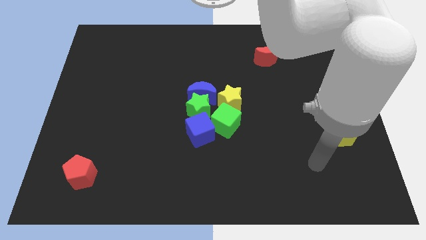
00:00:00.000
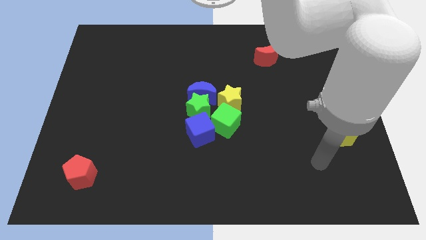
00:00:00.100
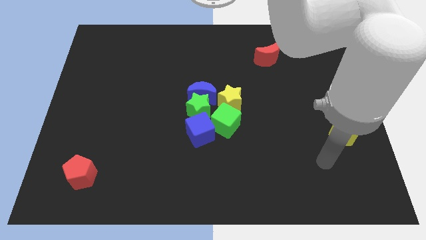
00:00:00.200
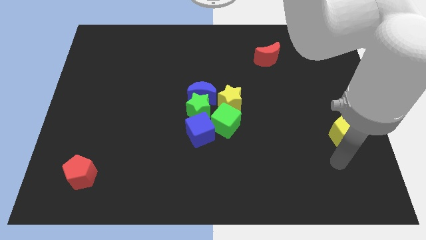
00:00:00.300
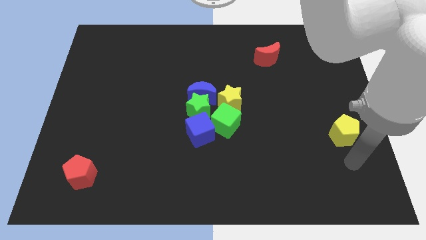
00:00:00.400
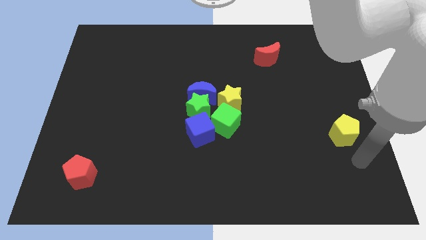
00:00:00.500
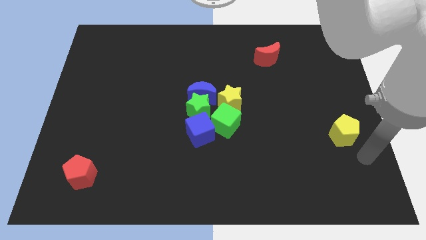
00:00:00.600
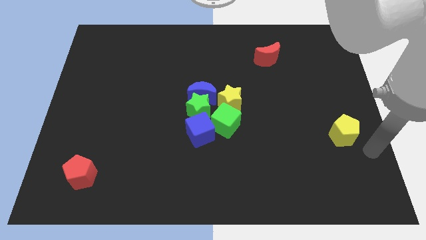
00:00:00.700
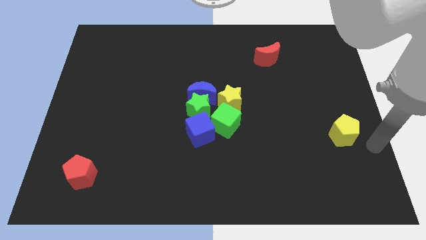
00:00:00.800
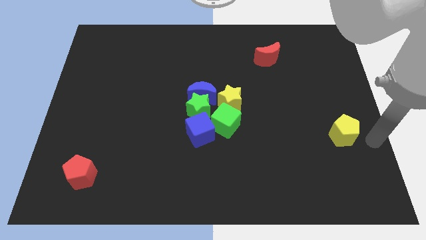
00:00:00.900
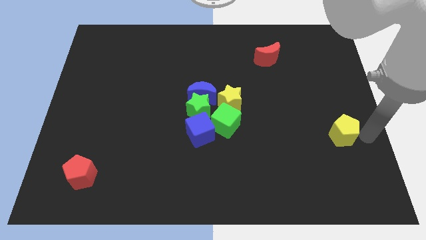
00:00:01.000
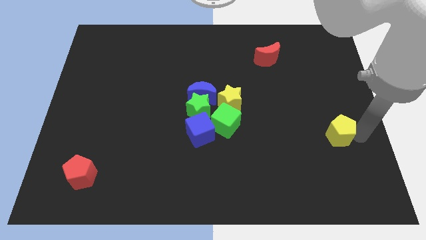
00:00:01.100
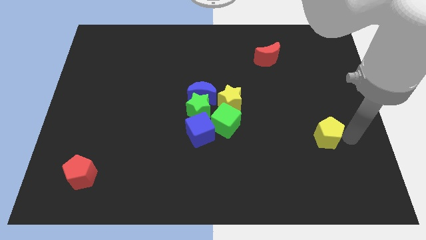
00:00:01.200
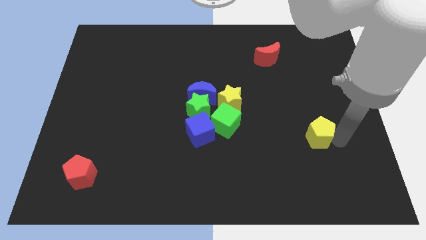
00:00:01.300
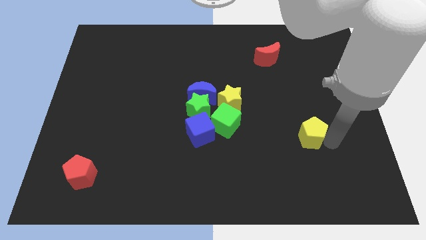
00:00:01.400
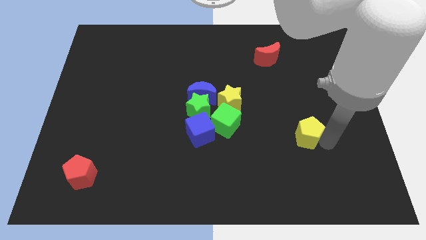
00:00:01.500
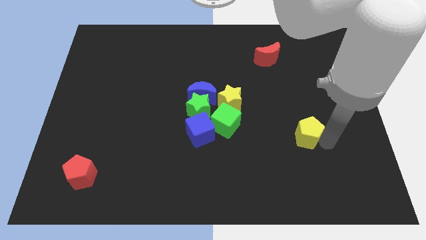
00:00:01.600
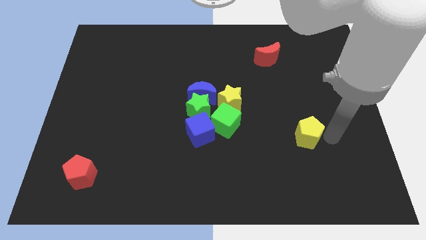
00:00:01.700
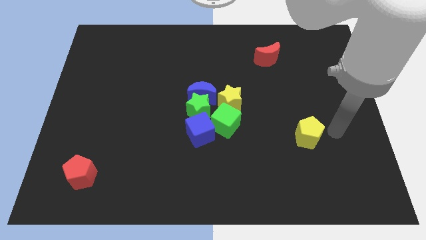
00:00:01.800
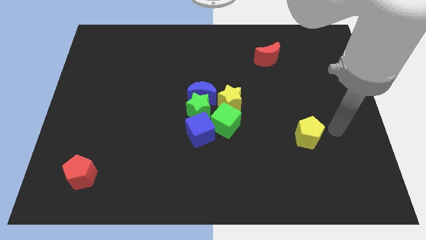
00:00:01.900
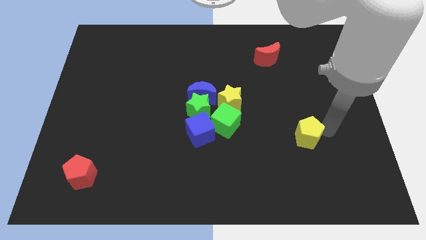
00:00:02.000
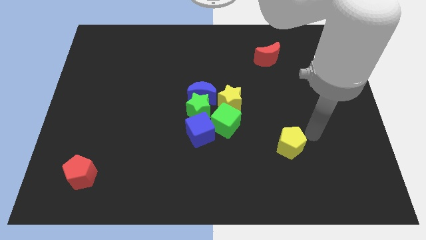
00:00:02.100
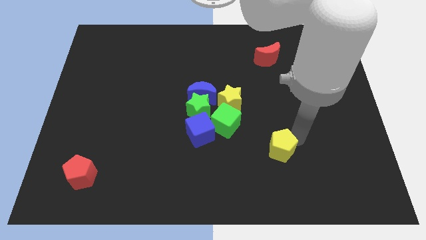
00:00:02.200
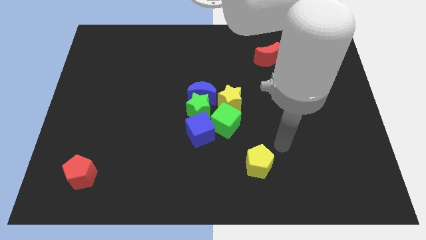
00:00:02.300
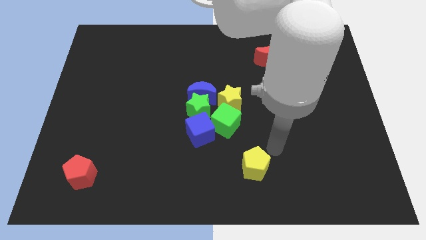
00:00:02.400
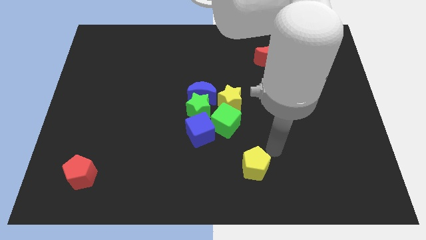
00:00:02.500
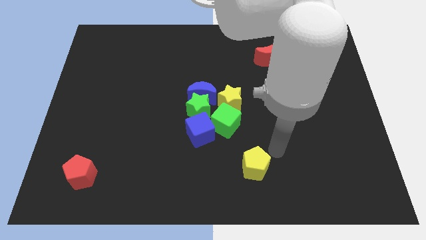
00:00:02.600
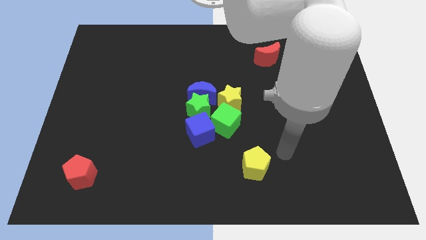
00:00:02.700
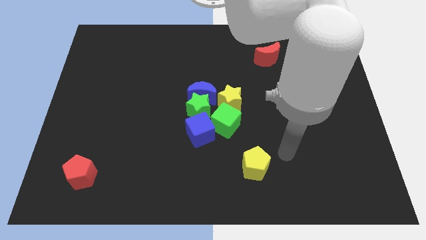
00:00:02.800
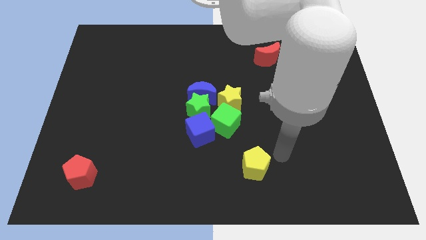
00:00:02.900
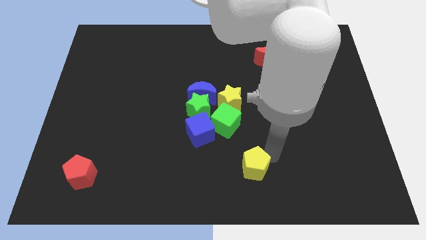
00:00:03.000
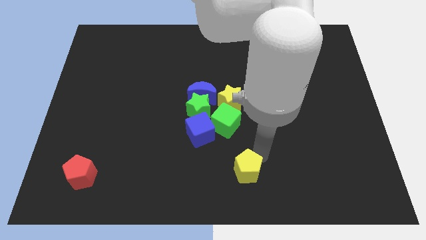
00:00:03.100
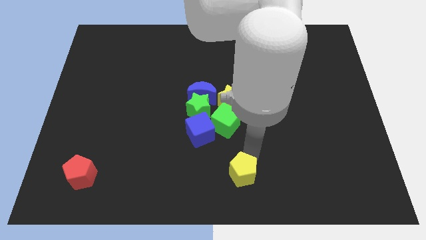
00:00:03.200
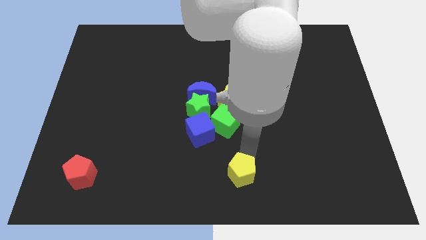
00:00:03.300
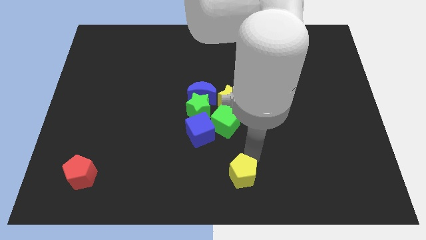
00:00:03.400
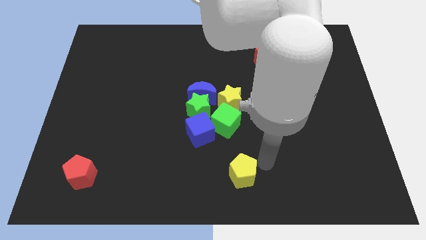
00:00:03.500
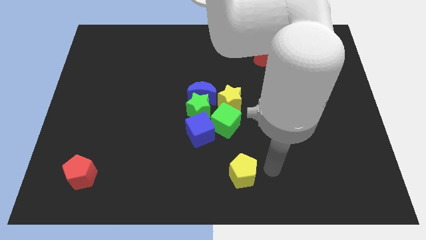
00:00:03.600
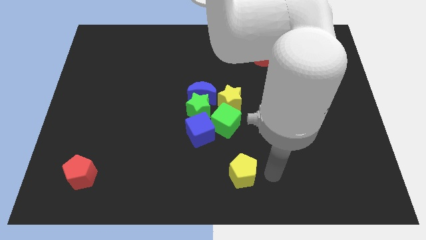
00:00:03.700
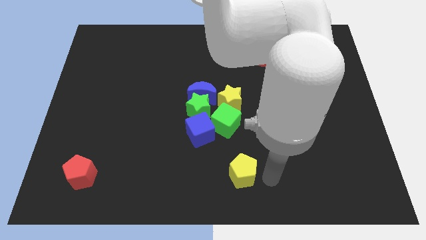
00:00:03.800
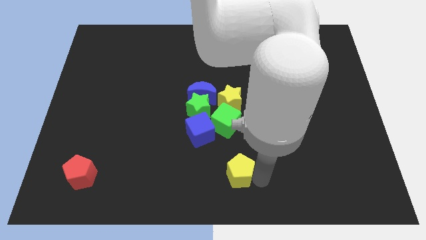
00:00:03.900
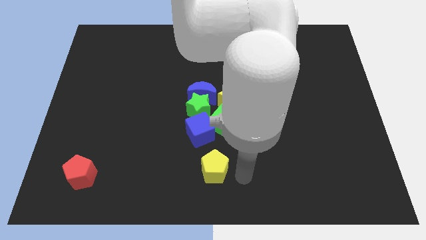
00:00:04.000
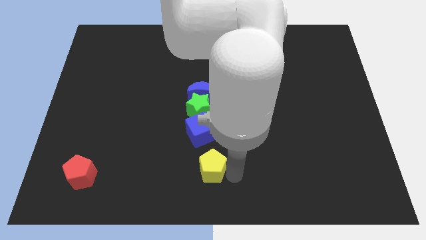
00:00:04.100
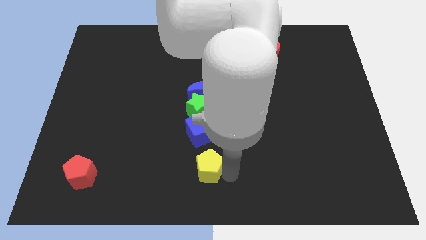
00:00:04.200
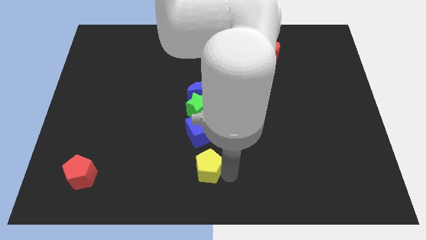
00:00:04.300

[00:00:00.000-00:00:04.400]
put the yellow pentagon below the group of blocks

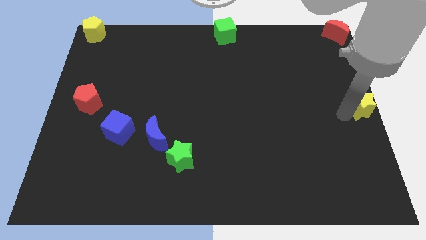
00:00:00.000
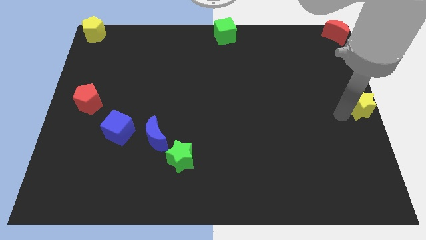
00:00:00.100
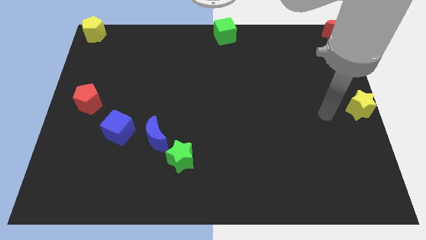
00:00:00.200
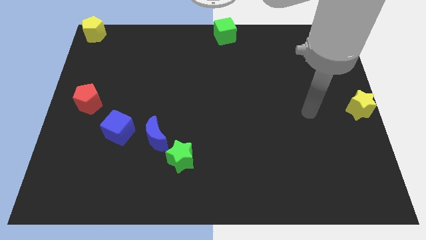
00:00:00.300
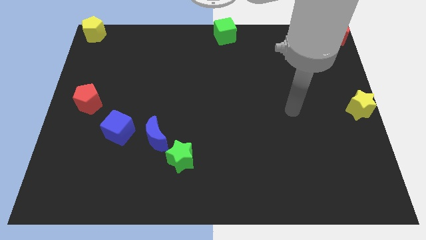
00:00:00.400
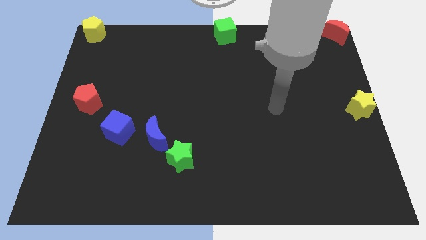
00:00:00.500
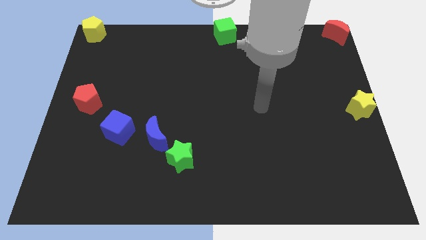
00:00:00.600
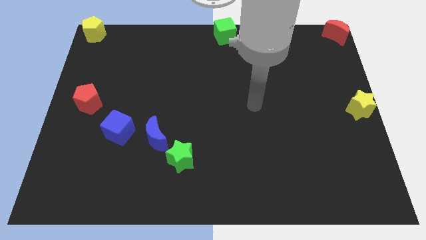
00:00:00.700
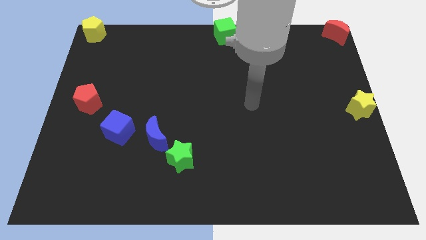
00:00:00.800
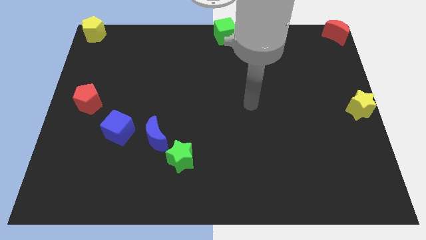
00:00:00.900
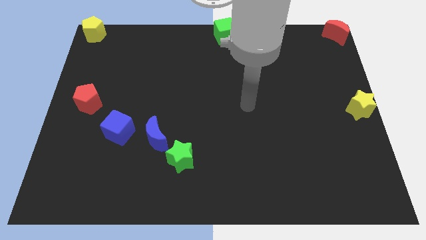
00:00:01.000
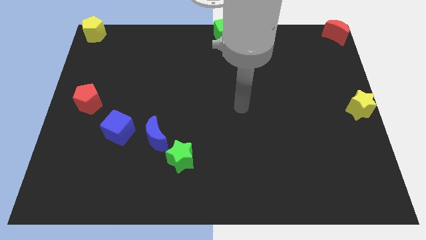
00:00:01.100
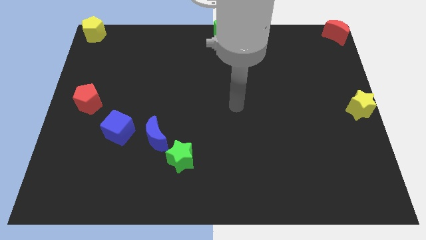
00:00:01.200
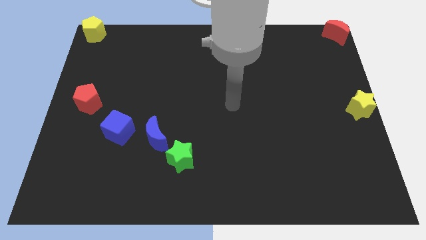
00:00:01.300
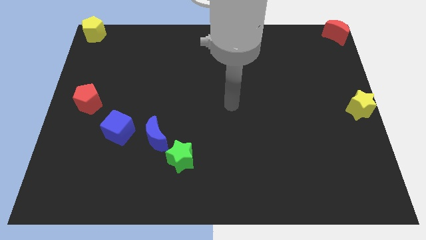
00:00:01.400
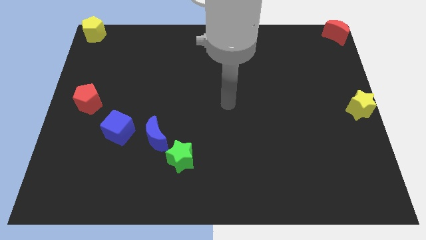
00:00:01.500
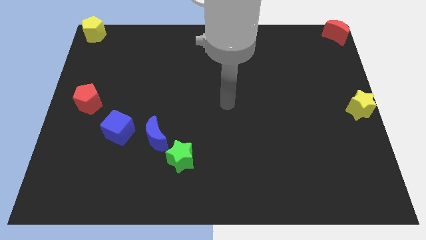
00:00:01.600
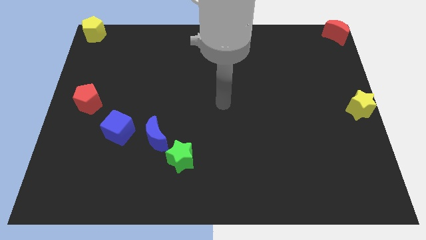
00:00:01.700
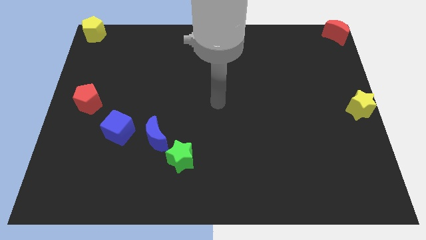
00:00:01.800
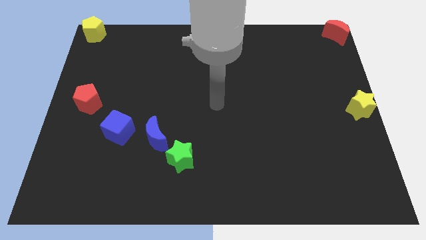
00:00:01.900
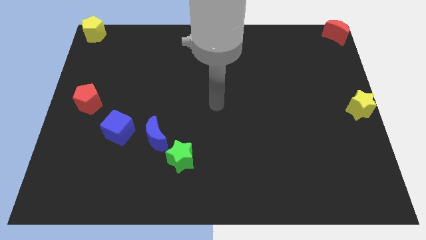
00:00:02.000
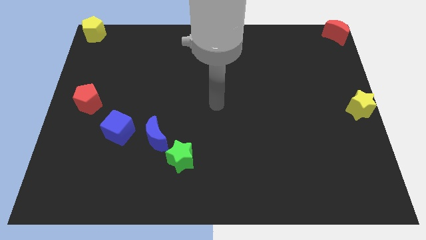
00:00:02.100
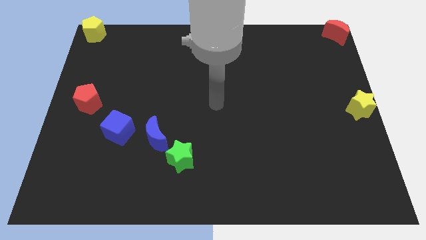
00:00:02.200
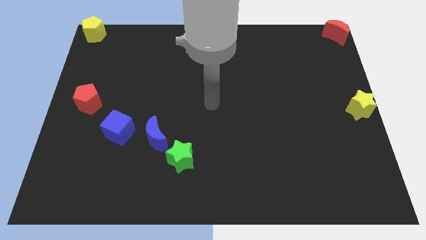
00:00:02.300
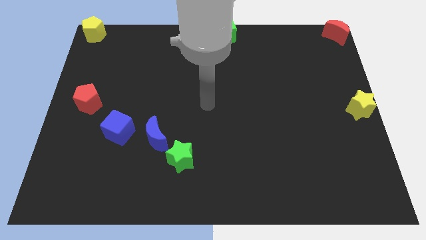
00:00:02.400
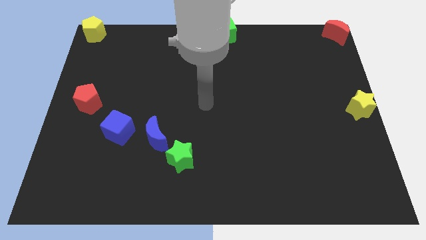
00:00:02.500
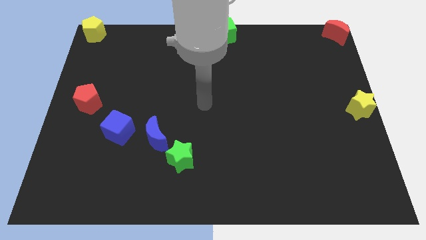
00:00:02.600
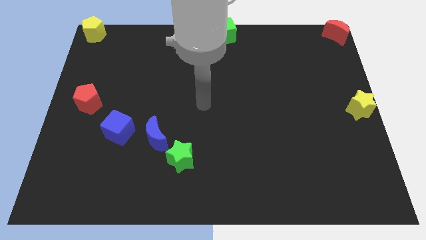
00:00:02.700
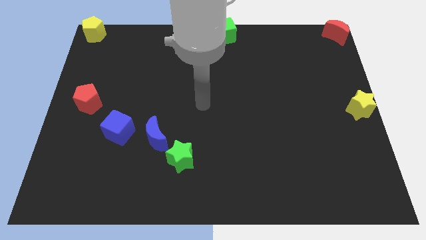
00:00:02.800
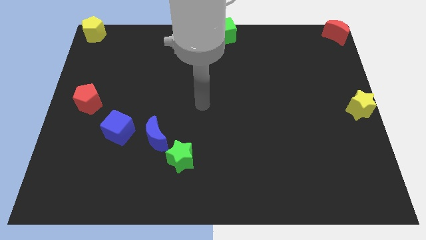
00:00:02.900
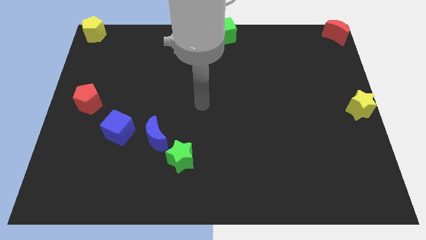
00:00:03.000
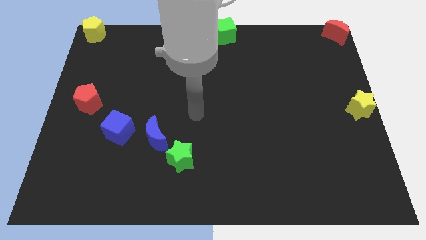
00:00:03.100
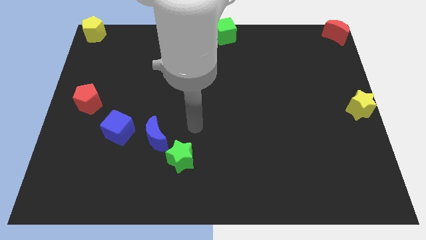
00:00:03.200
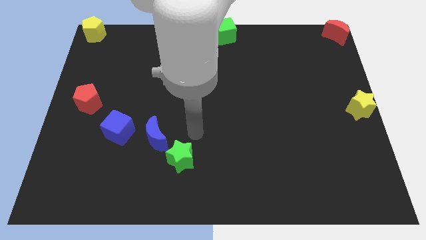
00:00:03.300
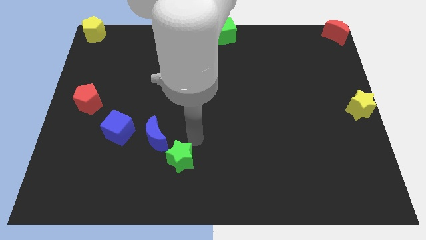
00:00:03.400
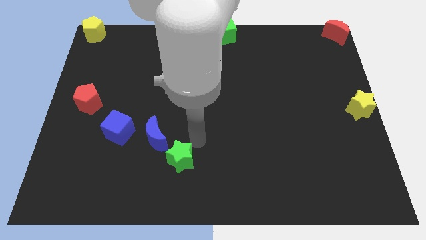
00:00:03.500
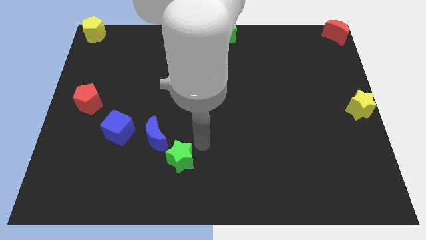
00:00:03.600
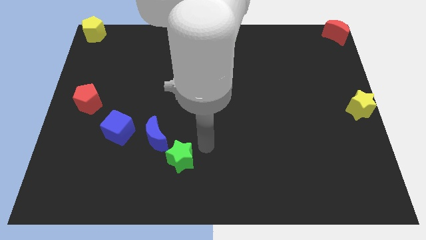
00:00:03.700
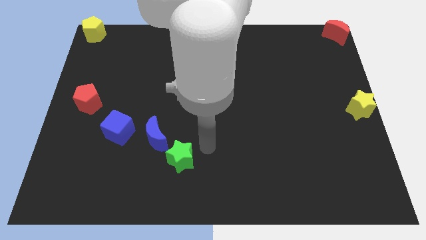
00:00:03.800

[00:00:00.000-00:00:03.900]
move your arm to the top right of green star

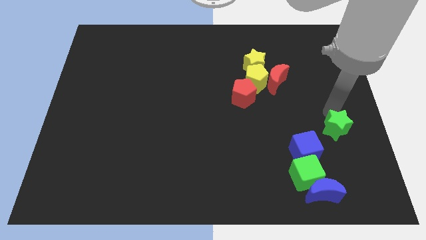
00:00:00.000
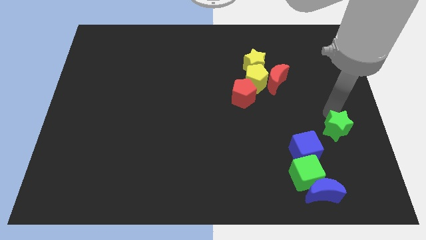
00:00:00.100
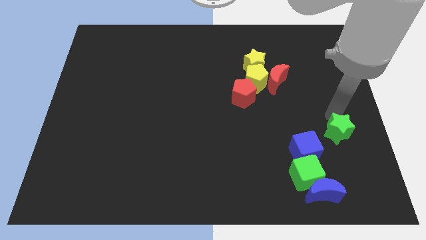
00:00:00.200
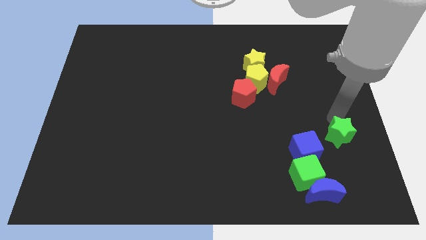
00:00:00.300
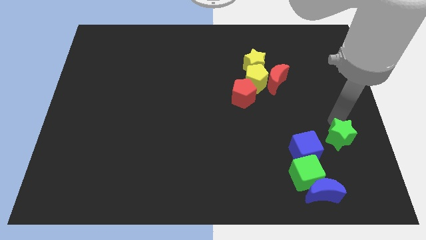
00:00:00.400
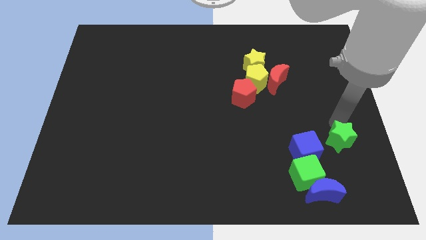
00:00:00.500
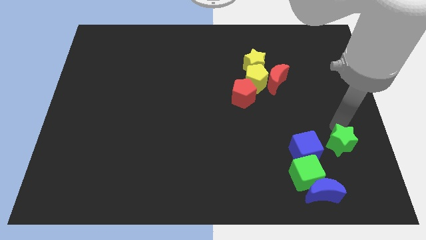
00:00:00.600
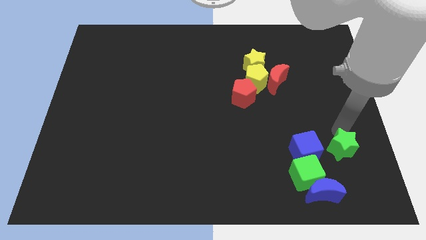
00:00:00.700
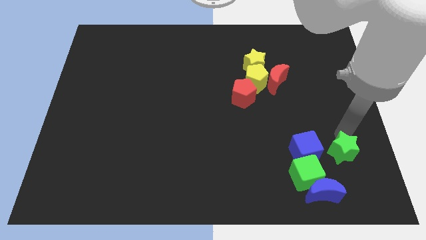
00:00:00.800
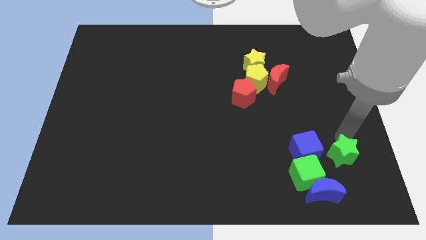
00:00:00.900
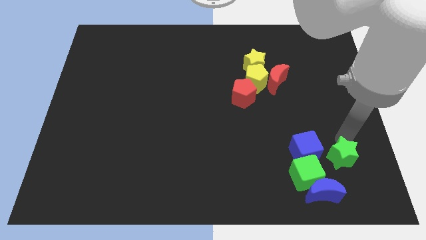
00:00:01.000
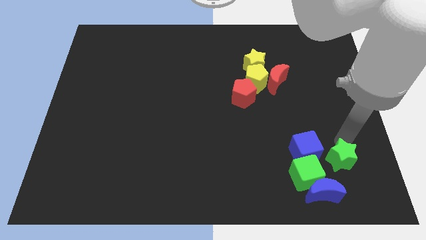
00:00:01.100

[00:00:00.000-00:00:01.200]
push the green star to the right of the green cube
